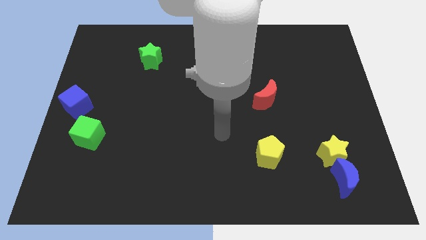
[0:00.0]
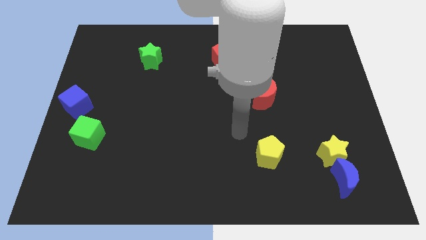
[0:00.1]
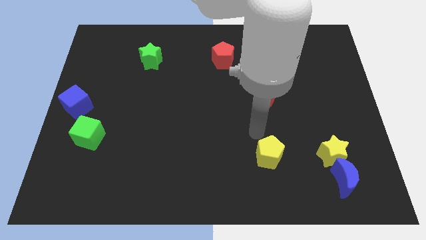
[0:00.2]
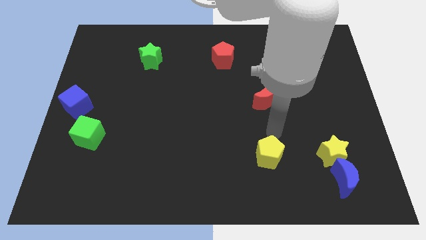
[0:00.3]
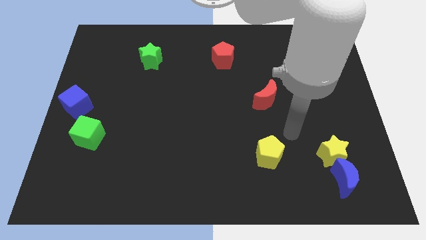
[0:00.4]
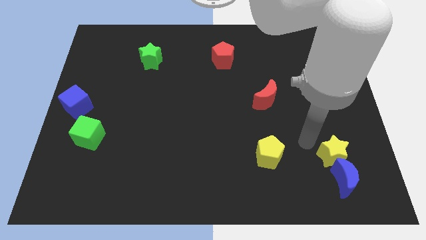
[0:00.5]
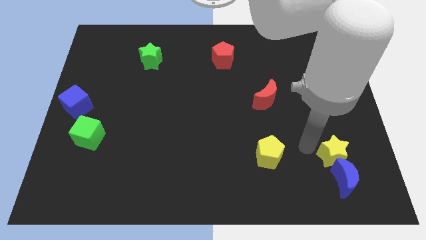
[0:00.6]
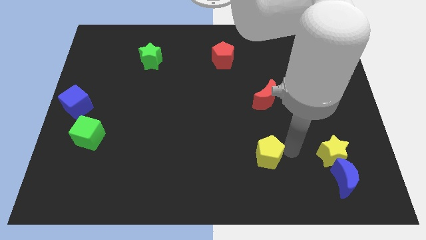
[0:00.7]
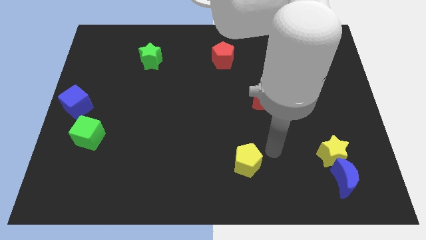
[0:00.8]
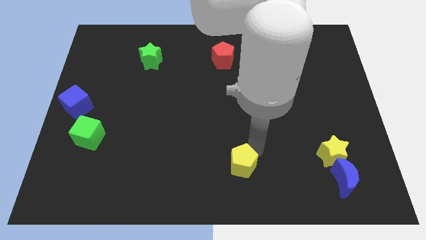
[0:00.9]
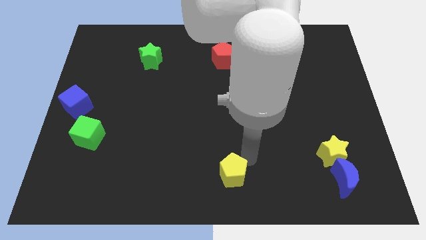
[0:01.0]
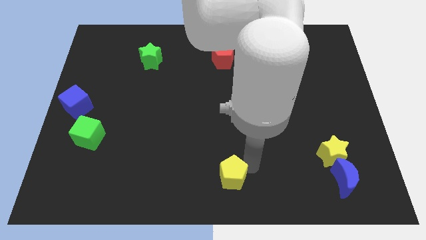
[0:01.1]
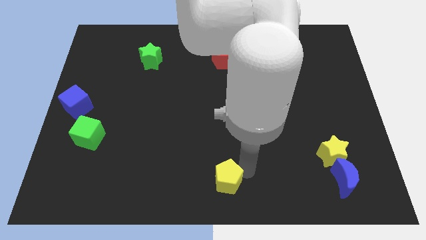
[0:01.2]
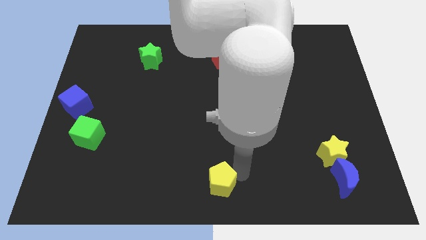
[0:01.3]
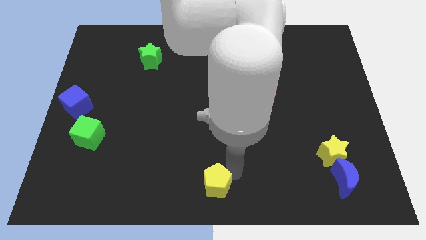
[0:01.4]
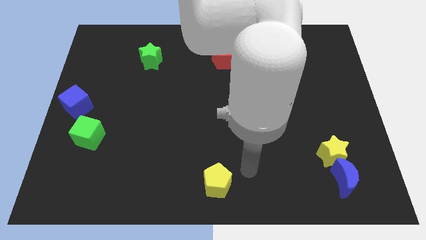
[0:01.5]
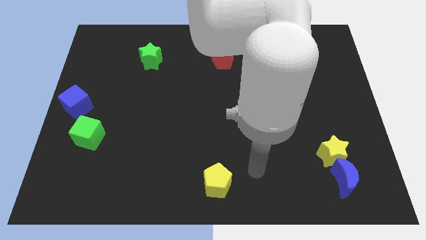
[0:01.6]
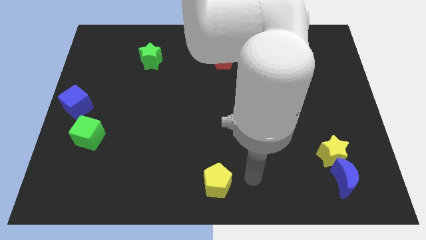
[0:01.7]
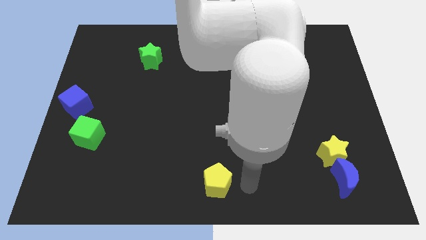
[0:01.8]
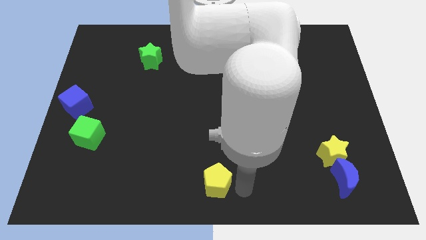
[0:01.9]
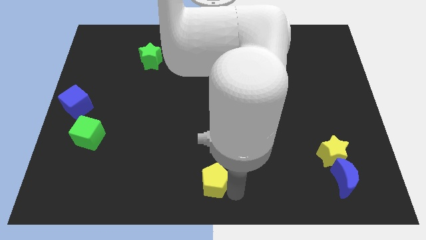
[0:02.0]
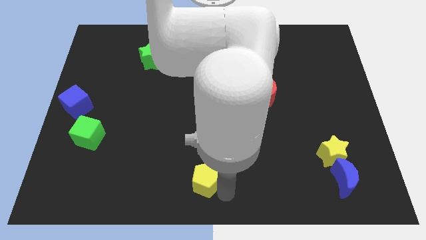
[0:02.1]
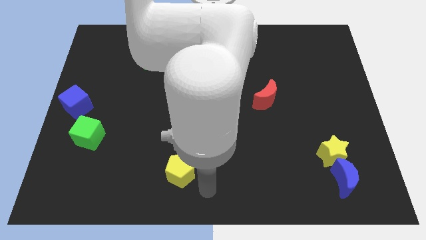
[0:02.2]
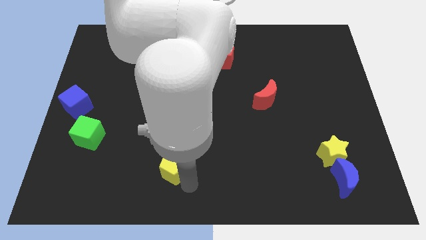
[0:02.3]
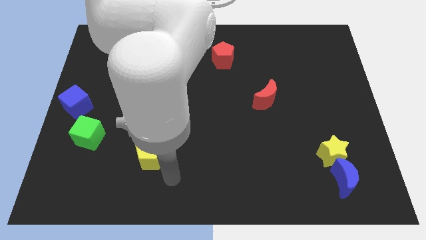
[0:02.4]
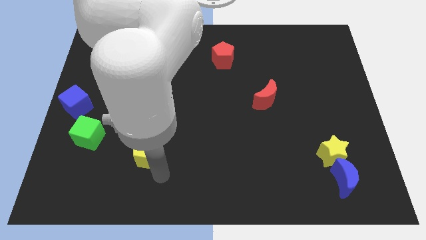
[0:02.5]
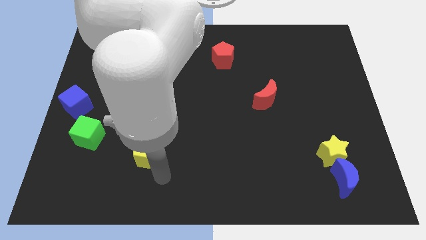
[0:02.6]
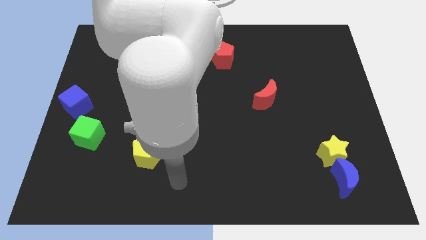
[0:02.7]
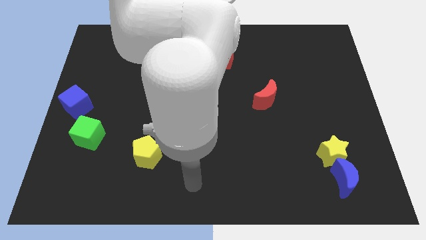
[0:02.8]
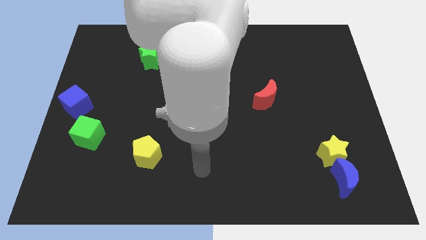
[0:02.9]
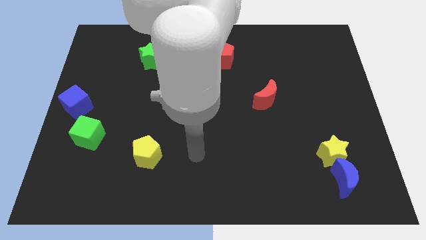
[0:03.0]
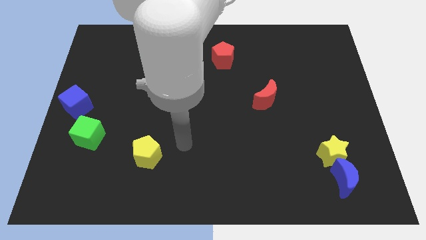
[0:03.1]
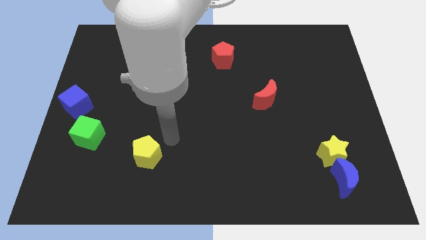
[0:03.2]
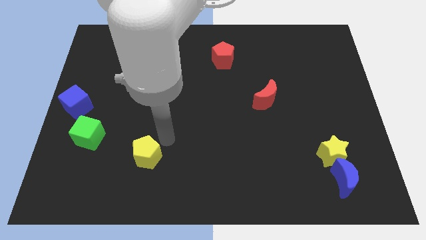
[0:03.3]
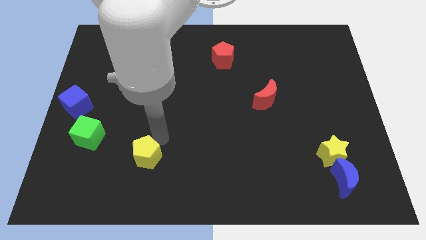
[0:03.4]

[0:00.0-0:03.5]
drag the yellow pentagon to the bottom right side of the green cube

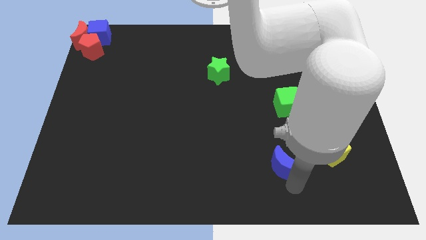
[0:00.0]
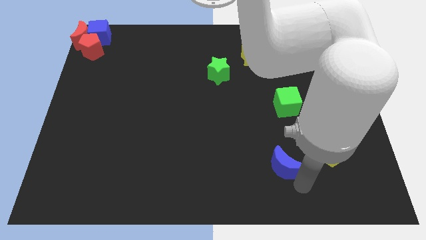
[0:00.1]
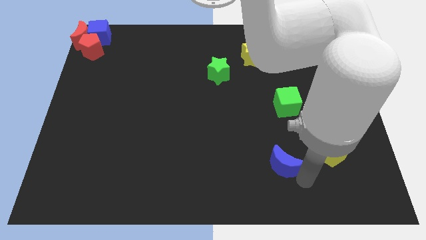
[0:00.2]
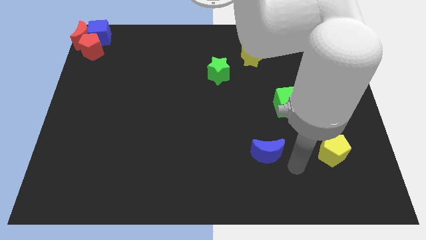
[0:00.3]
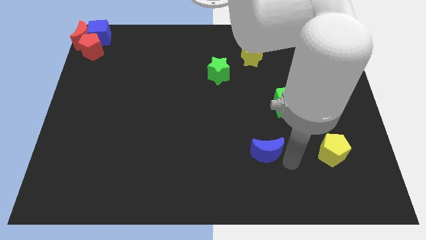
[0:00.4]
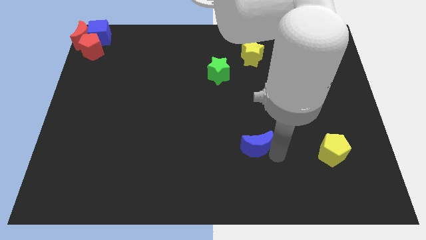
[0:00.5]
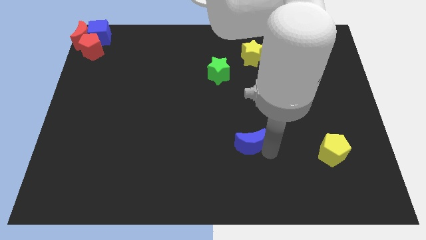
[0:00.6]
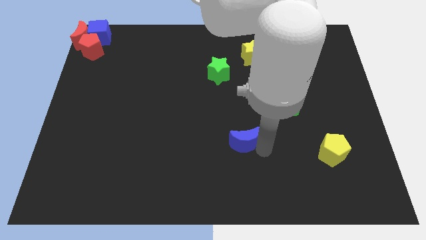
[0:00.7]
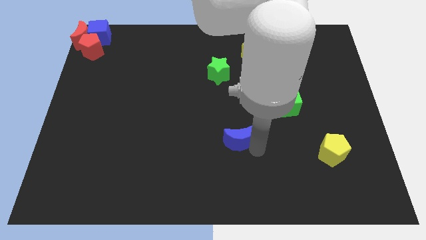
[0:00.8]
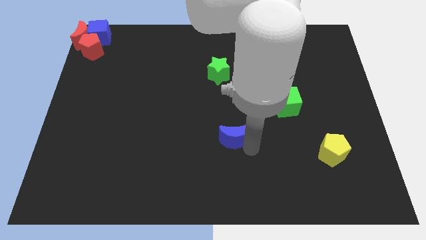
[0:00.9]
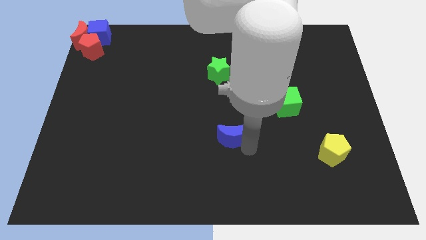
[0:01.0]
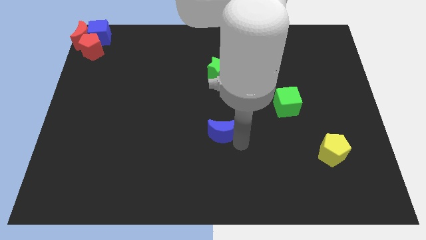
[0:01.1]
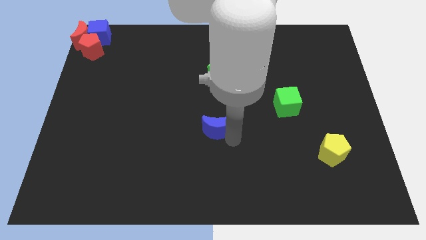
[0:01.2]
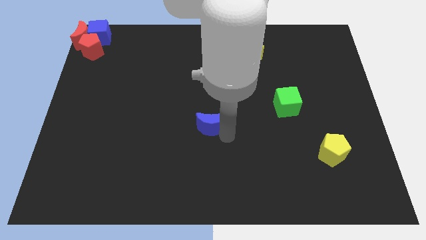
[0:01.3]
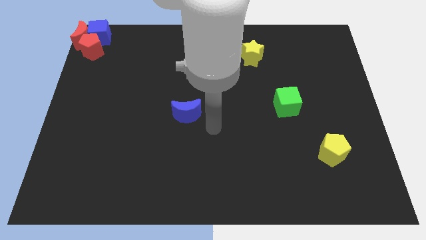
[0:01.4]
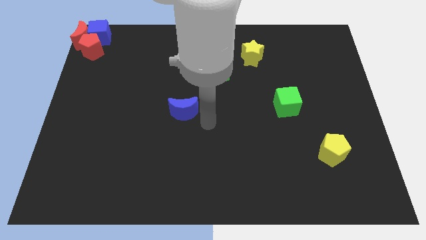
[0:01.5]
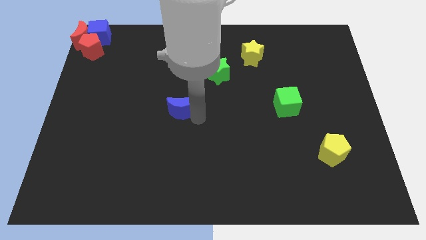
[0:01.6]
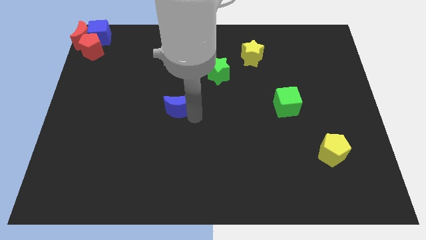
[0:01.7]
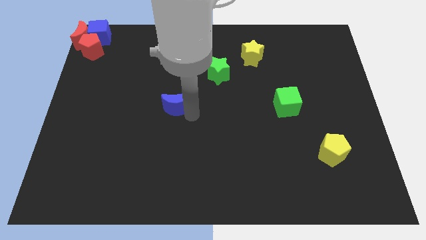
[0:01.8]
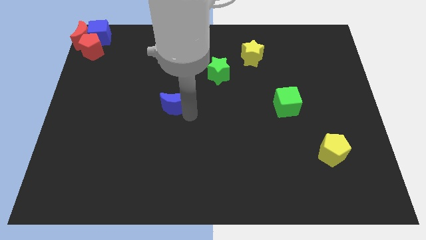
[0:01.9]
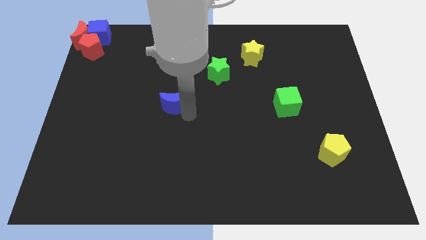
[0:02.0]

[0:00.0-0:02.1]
place blue moon diagonal to green star

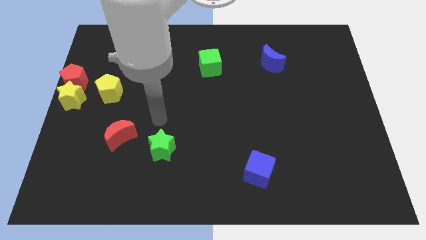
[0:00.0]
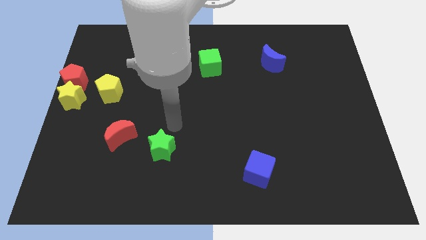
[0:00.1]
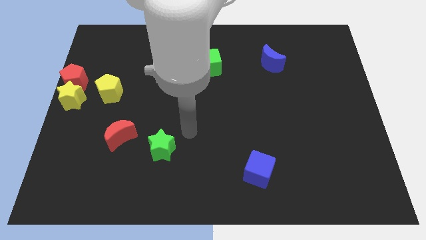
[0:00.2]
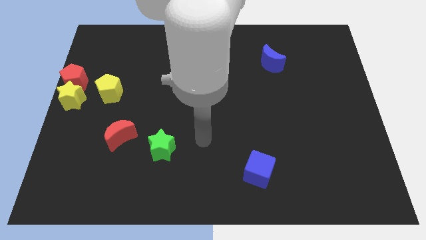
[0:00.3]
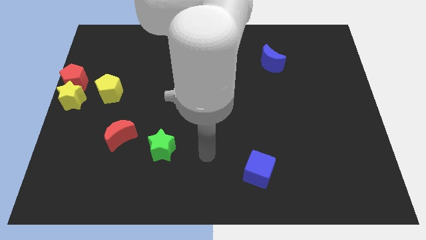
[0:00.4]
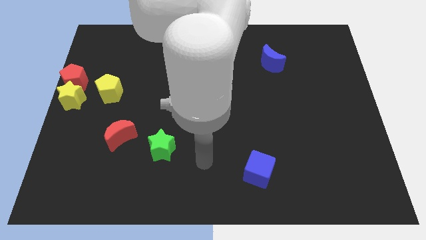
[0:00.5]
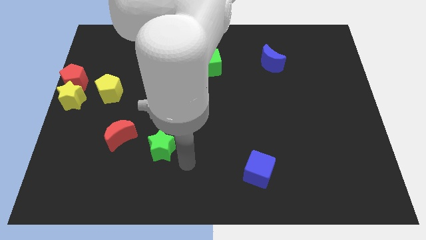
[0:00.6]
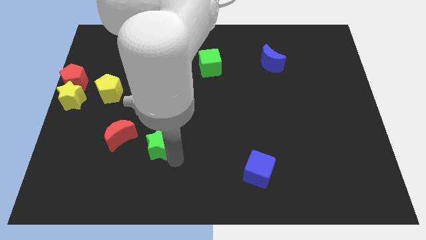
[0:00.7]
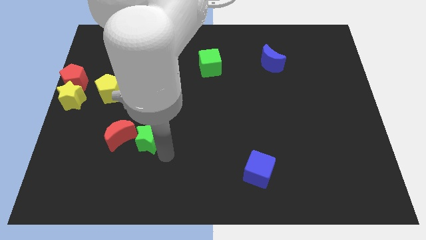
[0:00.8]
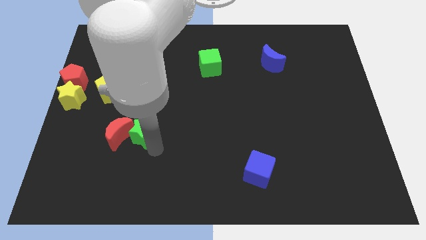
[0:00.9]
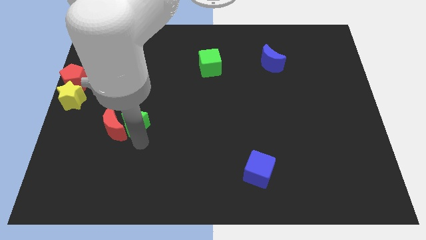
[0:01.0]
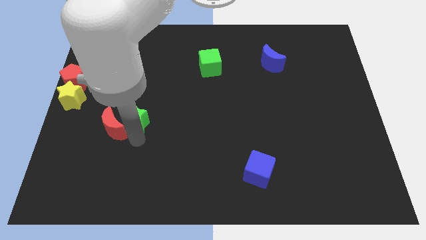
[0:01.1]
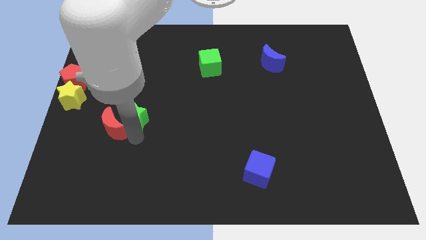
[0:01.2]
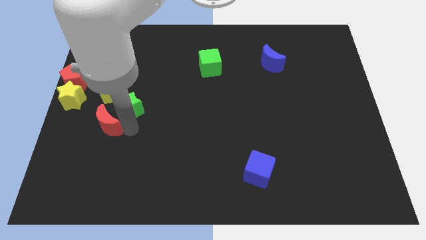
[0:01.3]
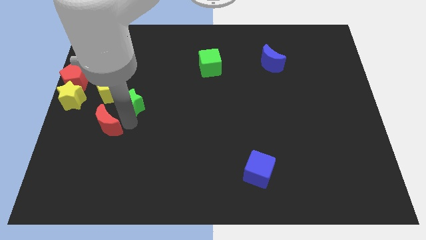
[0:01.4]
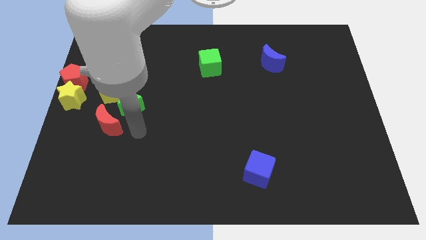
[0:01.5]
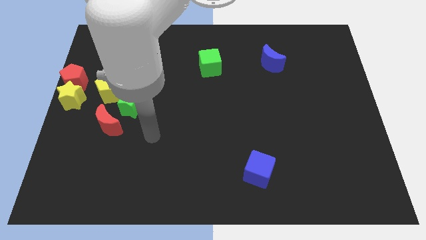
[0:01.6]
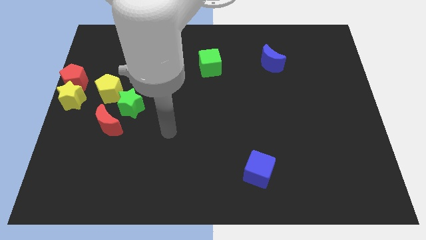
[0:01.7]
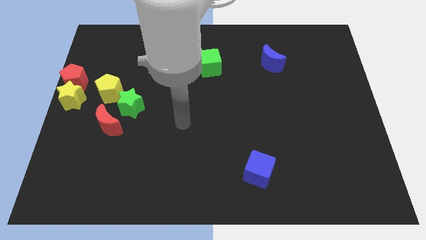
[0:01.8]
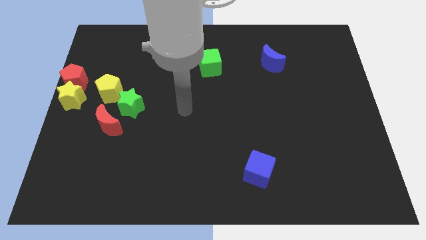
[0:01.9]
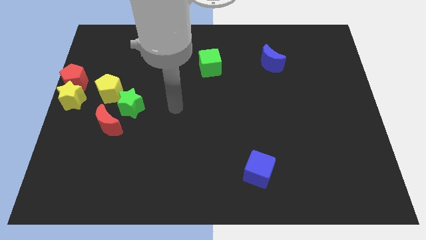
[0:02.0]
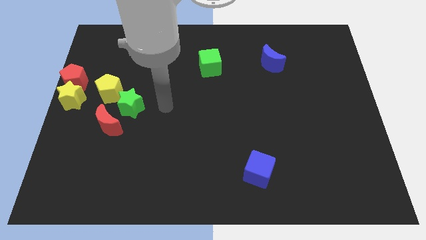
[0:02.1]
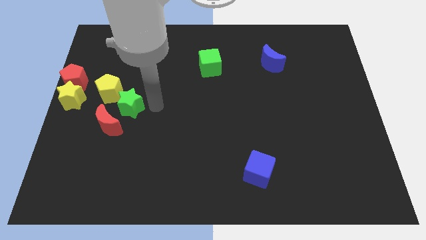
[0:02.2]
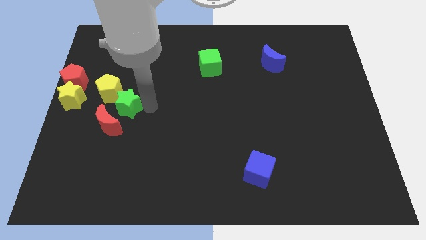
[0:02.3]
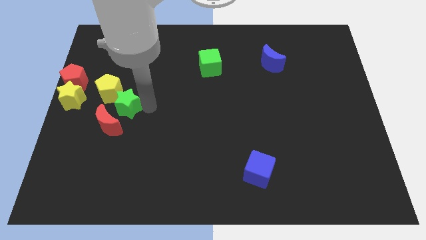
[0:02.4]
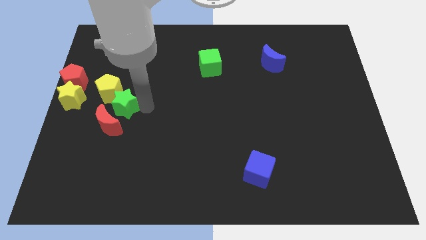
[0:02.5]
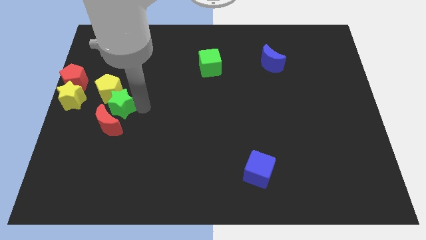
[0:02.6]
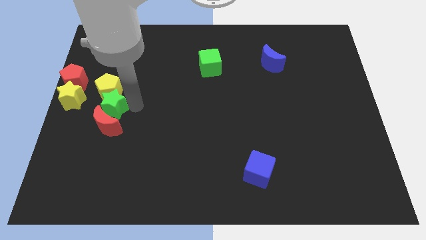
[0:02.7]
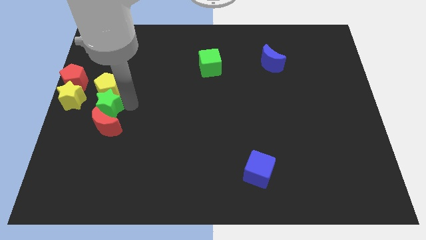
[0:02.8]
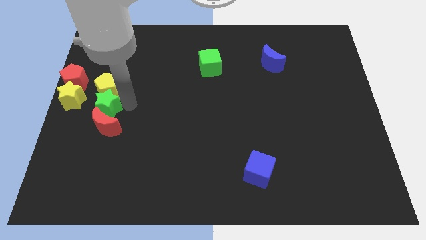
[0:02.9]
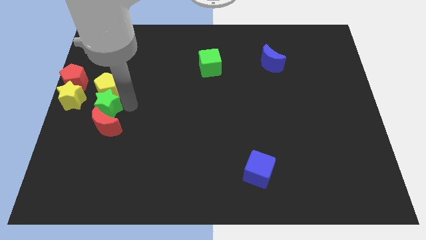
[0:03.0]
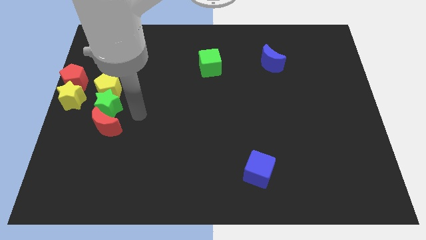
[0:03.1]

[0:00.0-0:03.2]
place the green star between the yellow pentagon and red moon

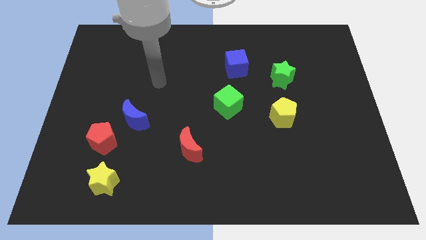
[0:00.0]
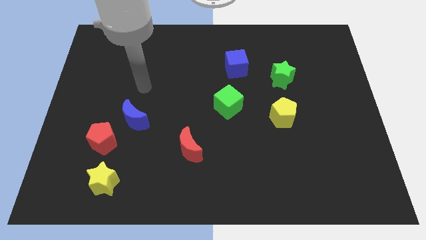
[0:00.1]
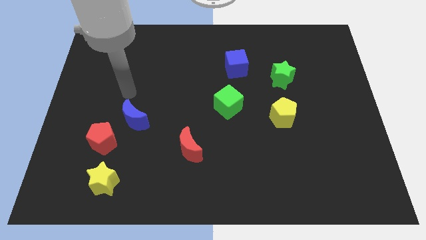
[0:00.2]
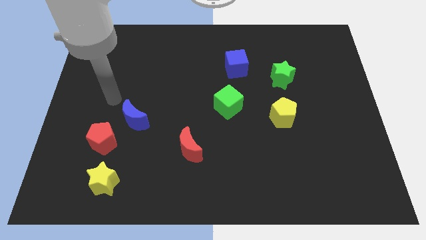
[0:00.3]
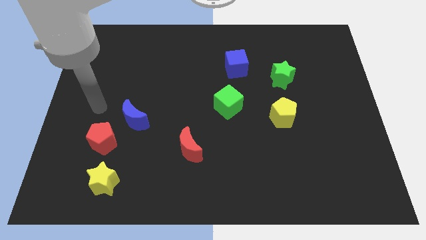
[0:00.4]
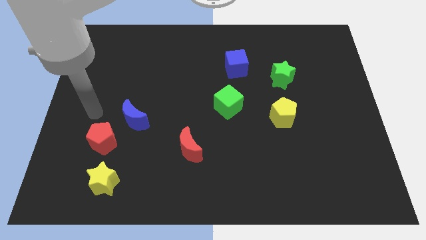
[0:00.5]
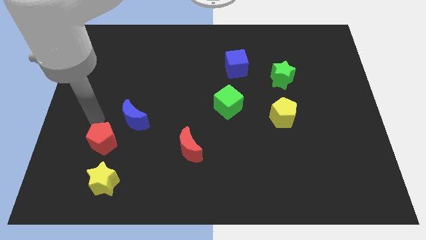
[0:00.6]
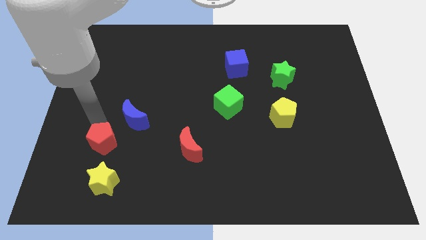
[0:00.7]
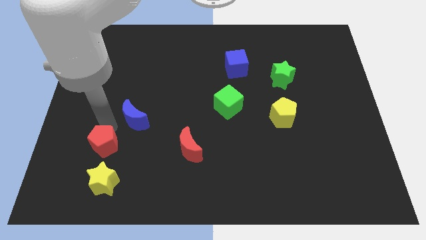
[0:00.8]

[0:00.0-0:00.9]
move your arm to the top side of the red pentagon
